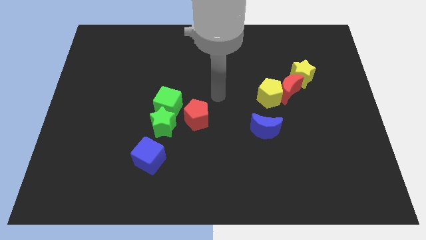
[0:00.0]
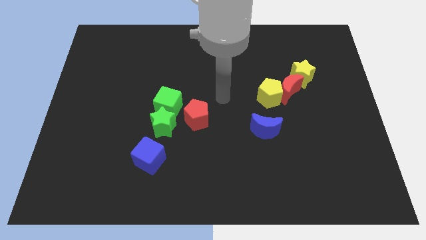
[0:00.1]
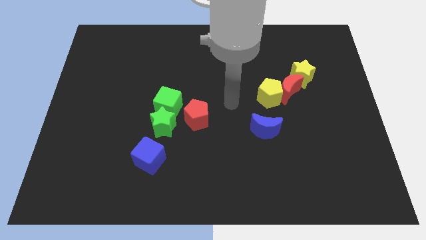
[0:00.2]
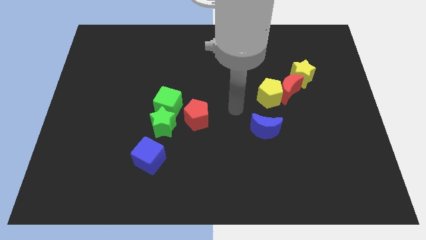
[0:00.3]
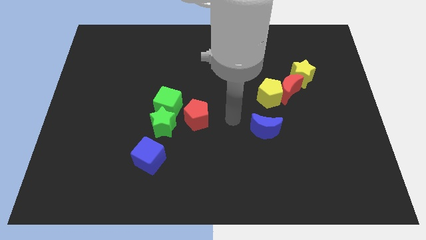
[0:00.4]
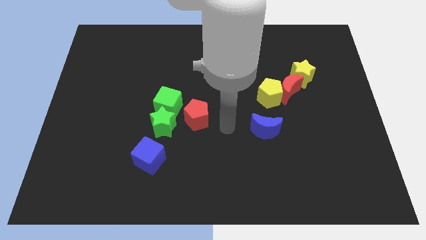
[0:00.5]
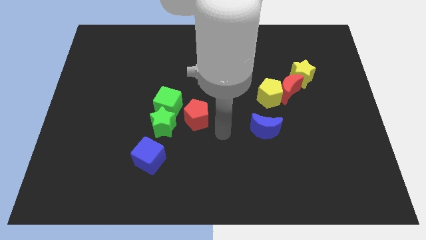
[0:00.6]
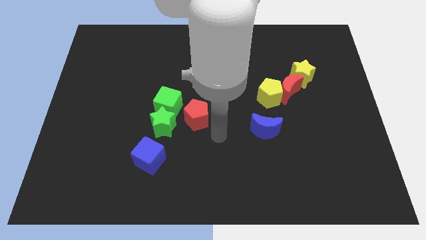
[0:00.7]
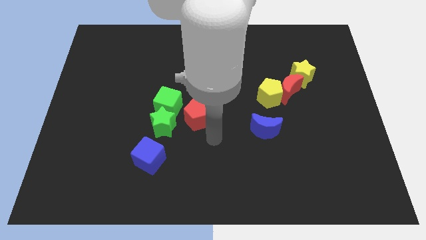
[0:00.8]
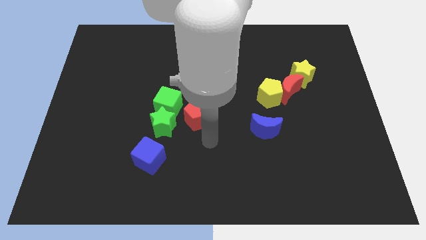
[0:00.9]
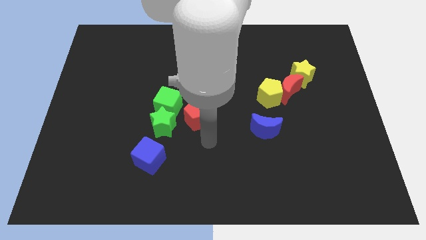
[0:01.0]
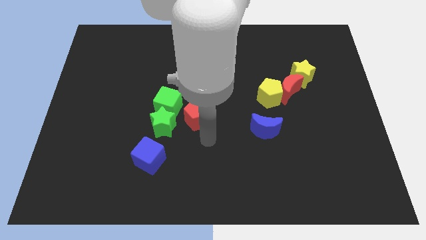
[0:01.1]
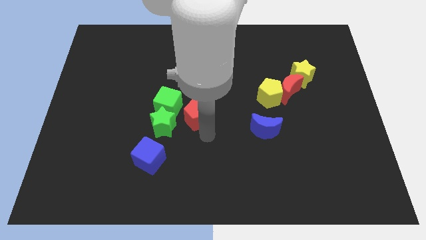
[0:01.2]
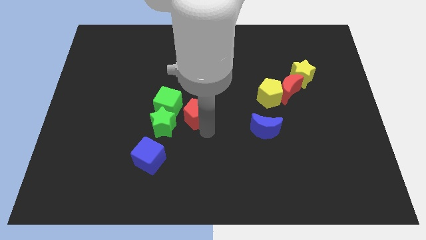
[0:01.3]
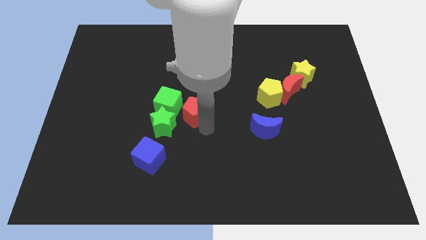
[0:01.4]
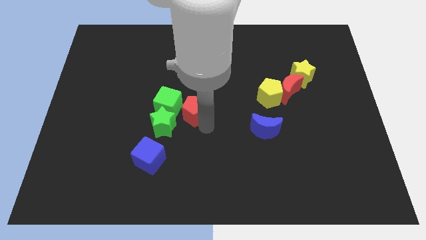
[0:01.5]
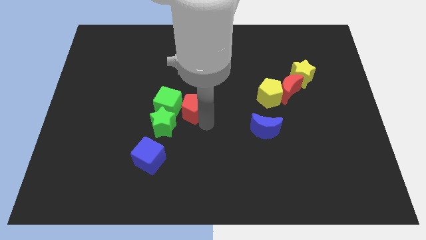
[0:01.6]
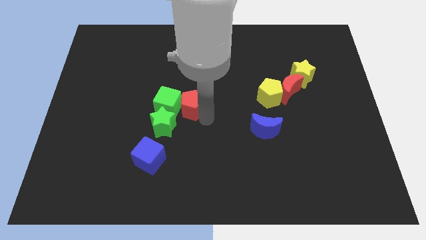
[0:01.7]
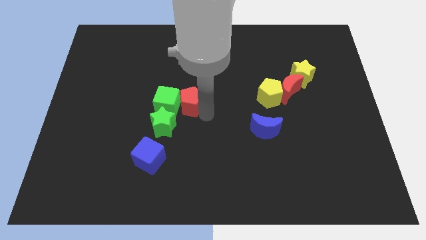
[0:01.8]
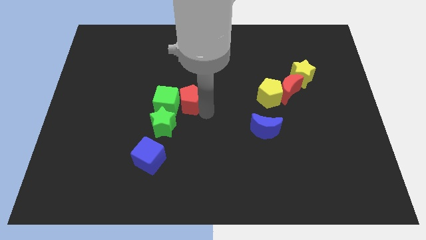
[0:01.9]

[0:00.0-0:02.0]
slide red pentagon into the green cube

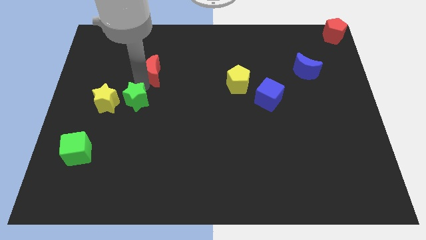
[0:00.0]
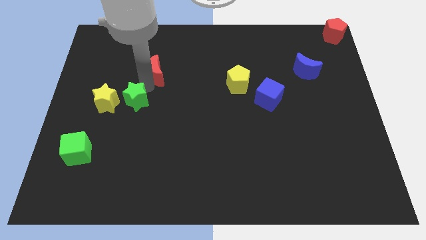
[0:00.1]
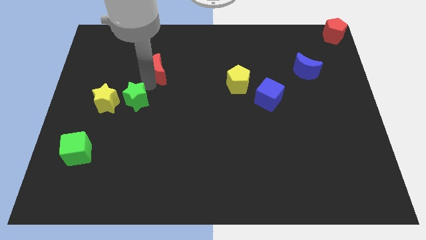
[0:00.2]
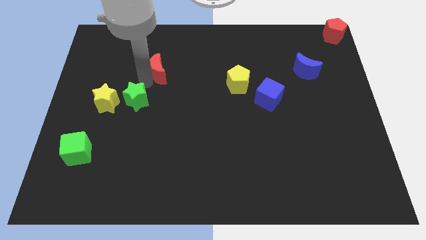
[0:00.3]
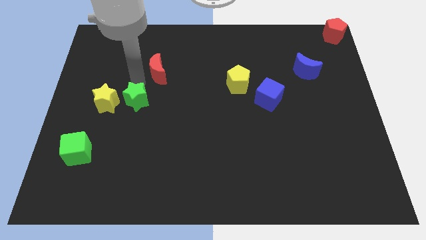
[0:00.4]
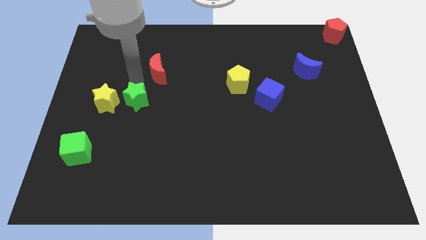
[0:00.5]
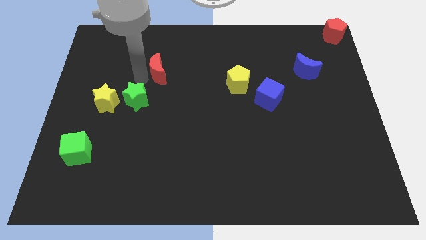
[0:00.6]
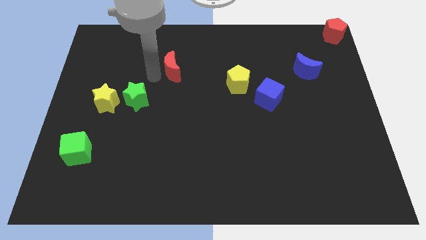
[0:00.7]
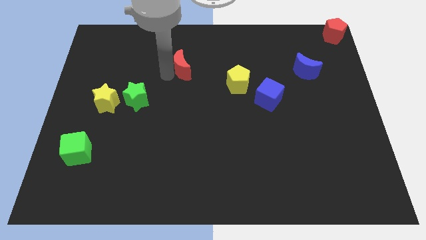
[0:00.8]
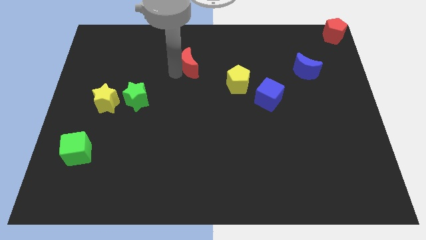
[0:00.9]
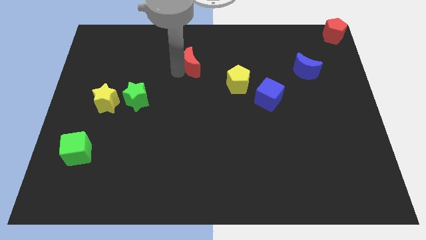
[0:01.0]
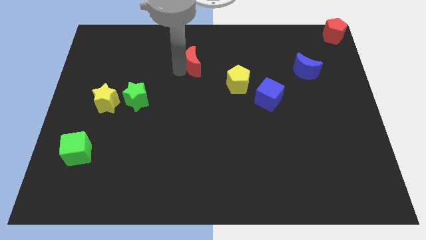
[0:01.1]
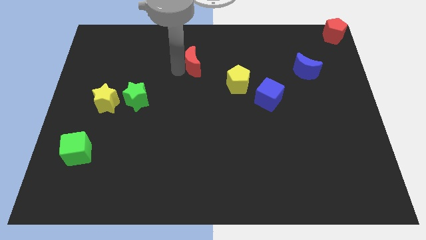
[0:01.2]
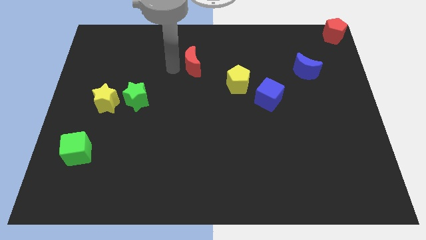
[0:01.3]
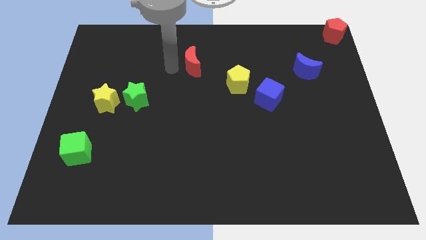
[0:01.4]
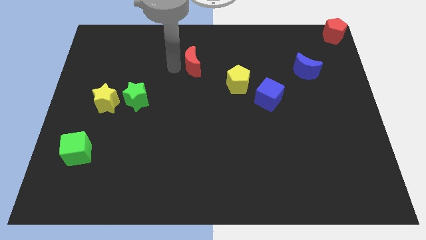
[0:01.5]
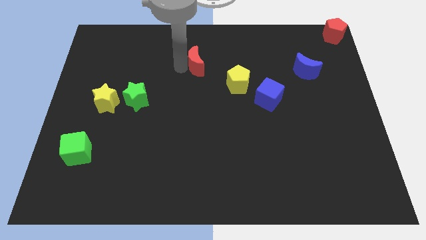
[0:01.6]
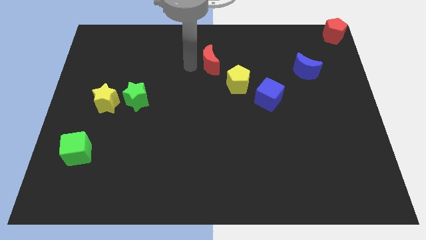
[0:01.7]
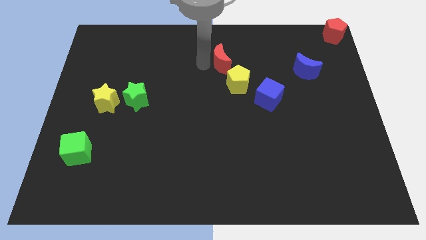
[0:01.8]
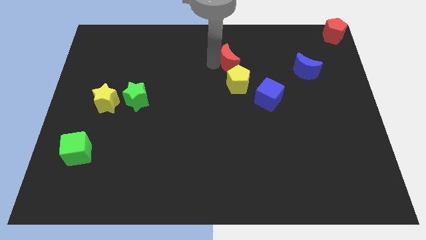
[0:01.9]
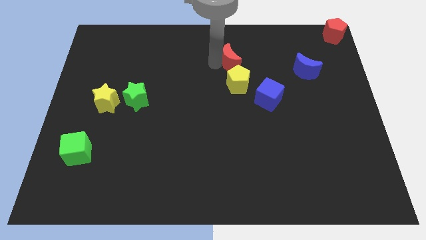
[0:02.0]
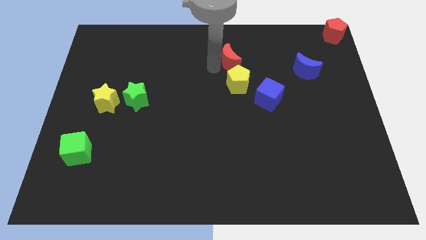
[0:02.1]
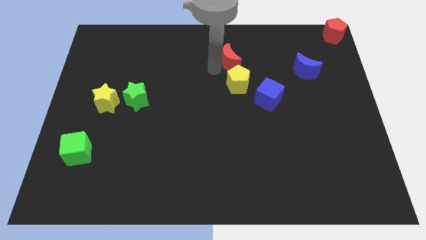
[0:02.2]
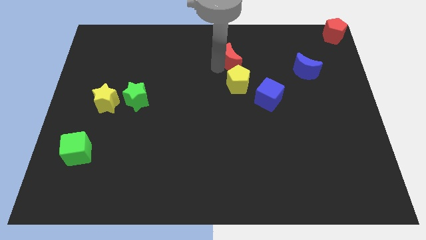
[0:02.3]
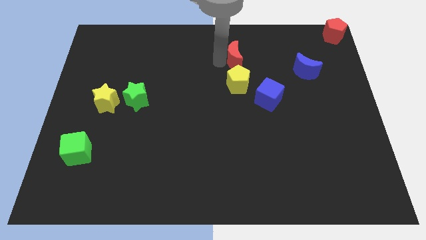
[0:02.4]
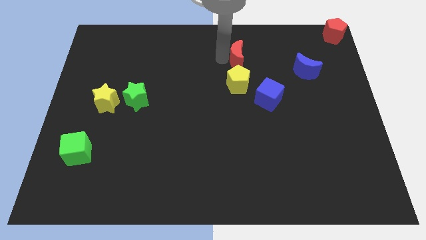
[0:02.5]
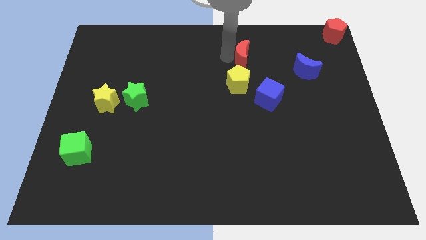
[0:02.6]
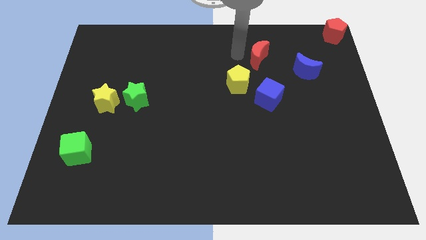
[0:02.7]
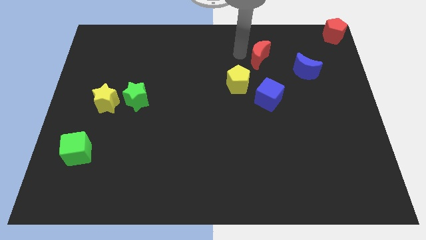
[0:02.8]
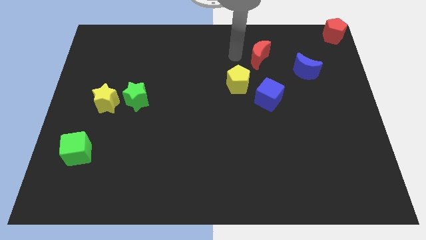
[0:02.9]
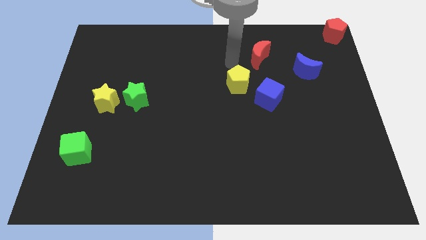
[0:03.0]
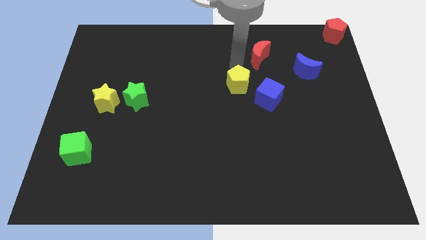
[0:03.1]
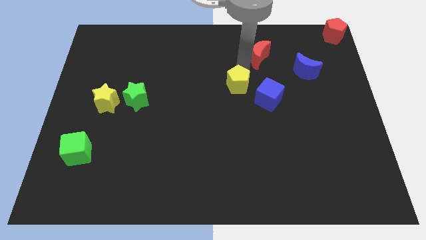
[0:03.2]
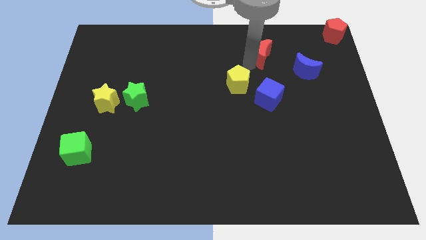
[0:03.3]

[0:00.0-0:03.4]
place red moon diagonally right above yellow pentagon

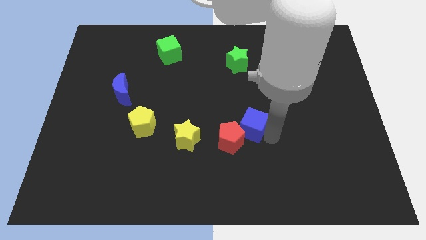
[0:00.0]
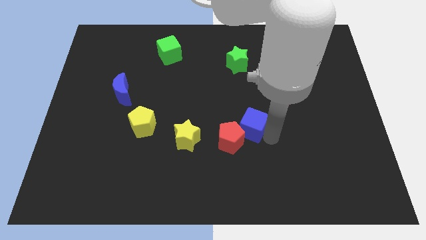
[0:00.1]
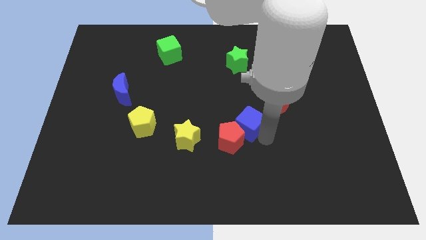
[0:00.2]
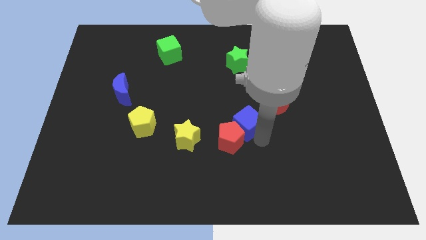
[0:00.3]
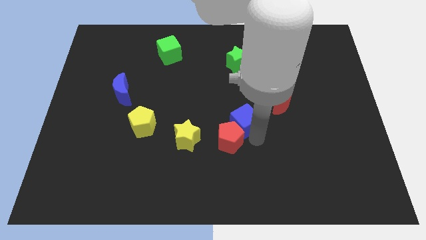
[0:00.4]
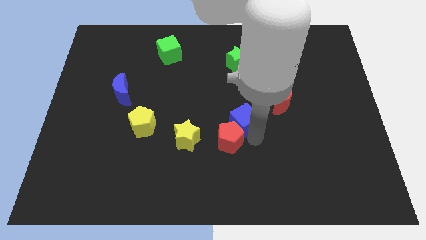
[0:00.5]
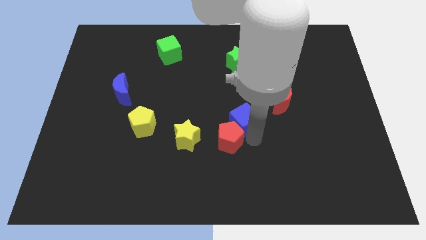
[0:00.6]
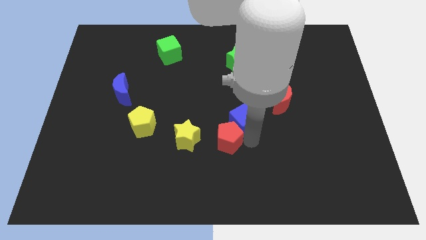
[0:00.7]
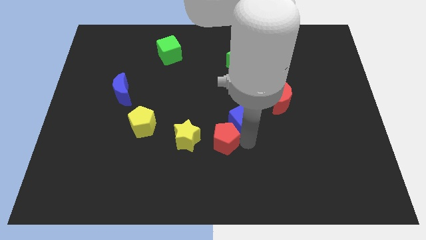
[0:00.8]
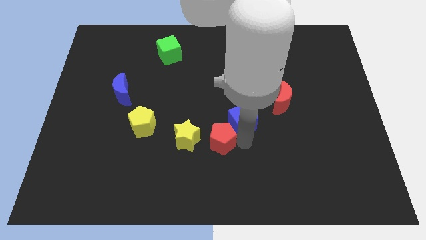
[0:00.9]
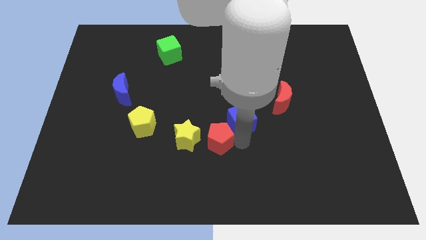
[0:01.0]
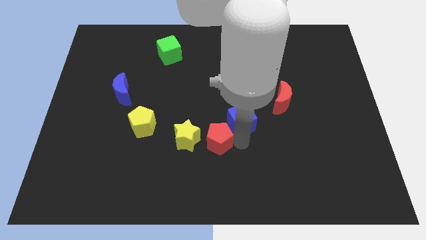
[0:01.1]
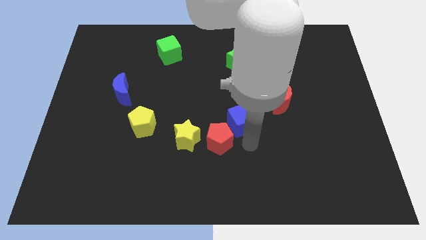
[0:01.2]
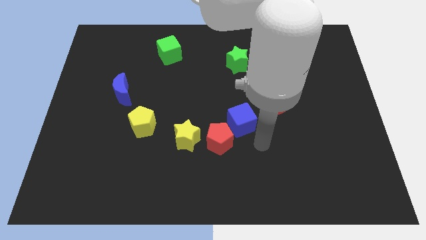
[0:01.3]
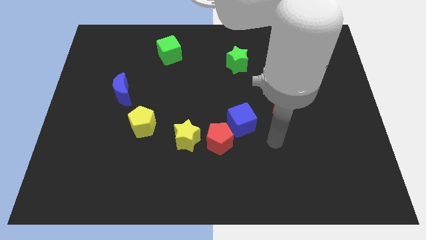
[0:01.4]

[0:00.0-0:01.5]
push the blue cube into the red pentagon

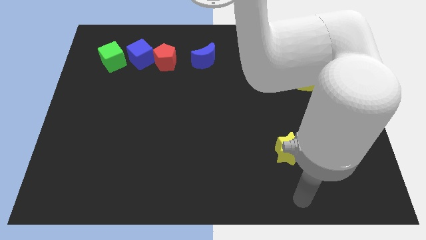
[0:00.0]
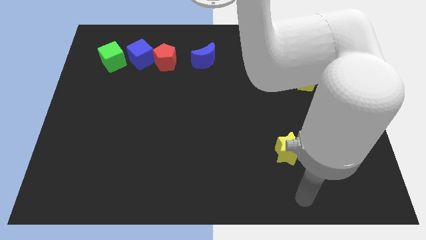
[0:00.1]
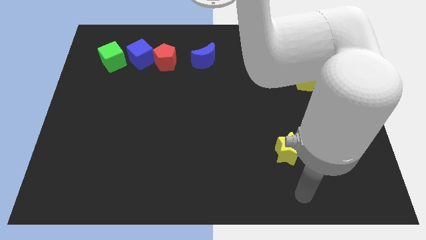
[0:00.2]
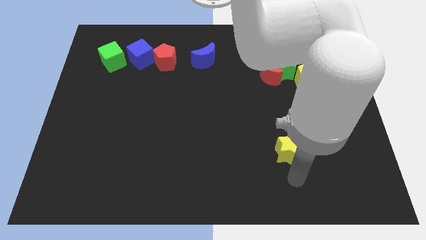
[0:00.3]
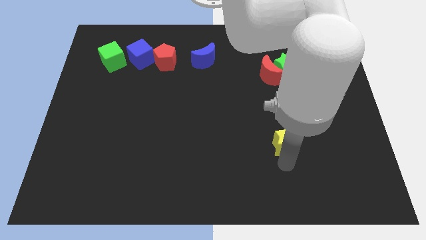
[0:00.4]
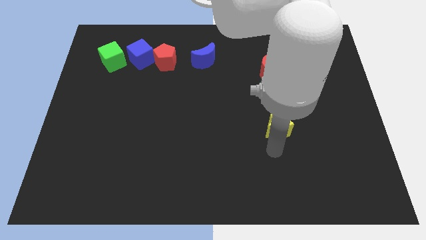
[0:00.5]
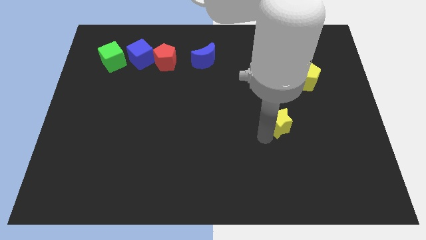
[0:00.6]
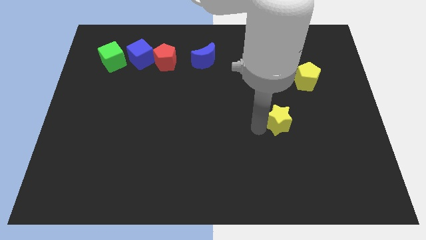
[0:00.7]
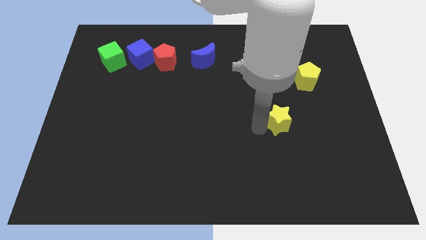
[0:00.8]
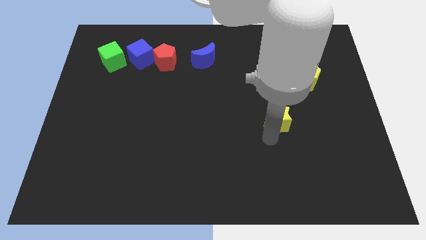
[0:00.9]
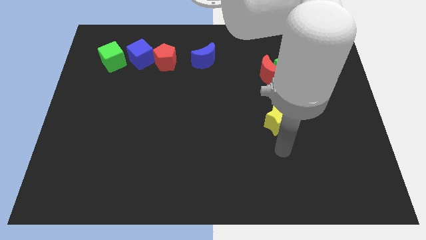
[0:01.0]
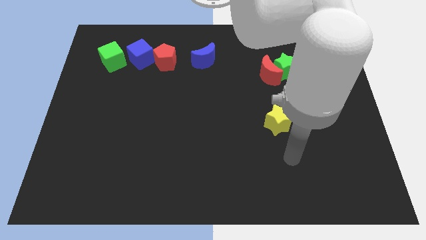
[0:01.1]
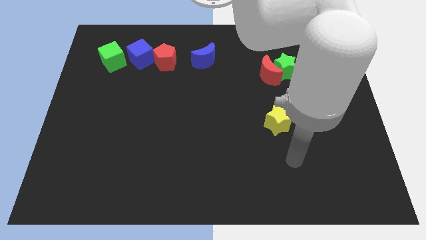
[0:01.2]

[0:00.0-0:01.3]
move the yellow star below the red moon

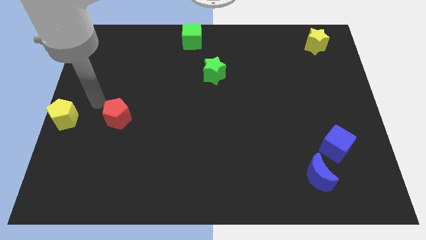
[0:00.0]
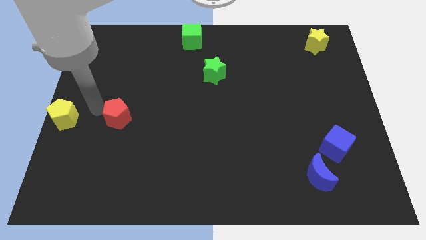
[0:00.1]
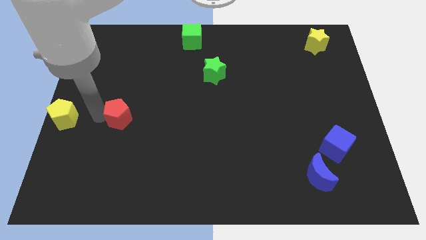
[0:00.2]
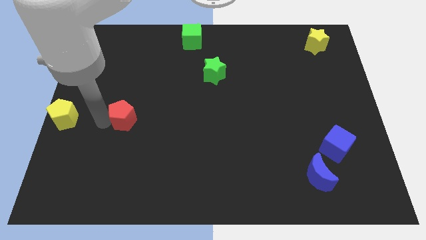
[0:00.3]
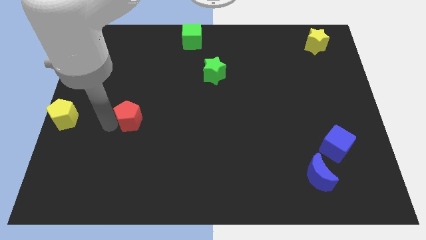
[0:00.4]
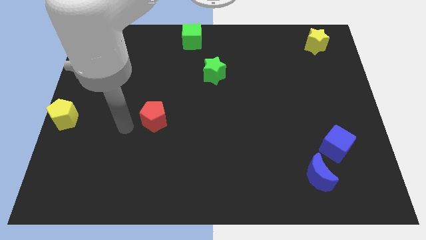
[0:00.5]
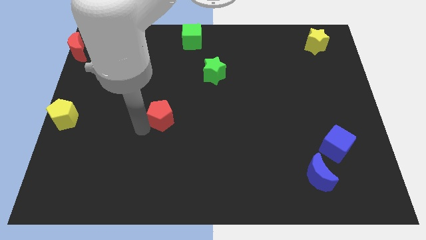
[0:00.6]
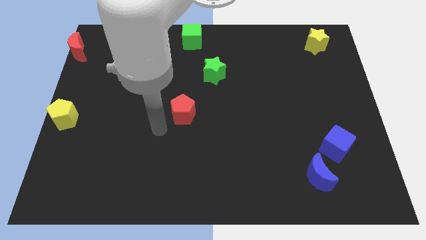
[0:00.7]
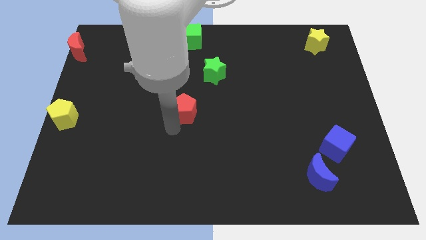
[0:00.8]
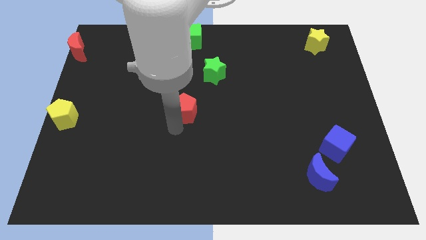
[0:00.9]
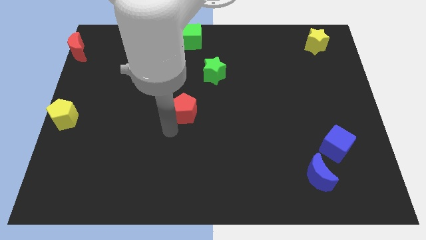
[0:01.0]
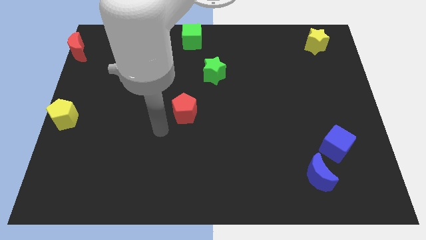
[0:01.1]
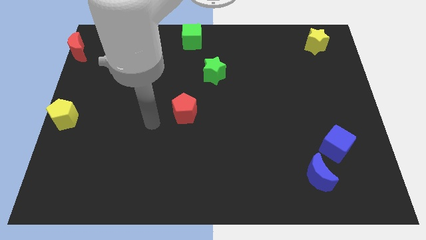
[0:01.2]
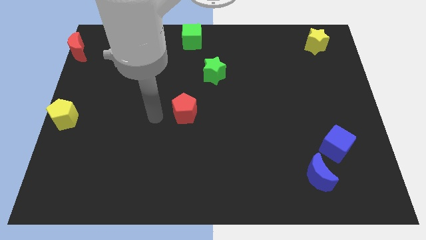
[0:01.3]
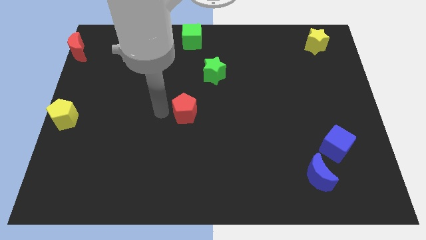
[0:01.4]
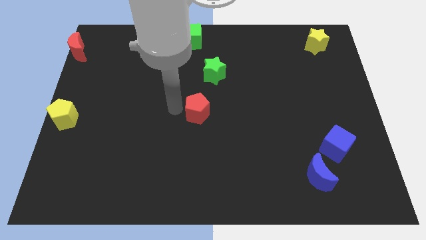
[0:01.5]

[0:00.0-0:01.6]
move the red pentagon towards the center of the board
